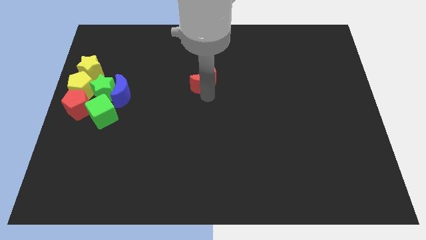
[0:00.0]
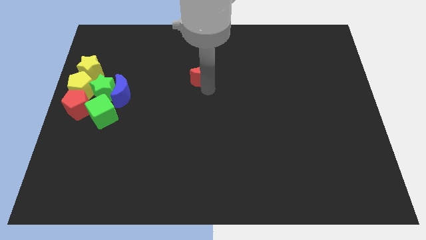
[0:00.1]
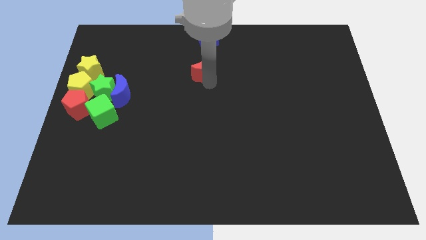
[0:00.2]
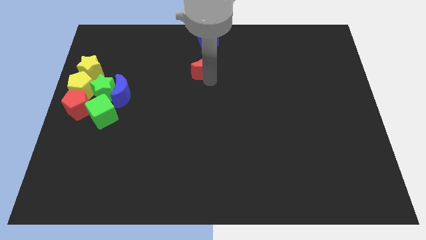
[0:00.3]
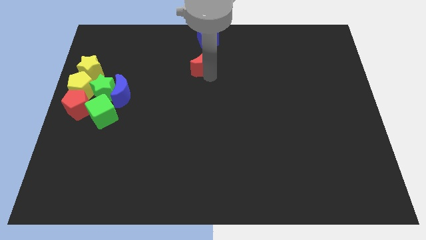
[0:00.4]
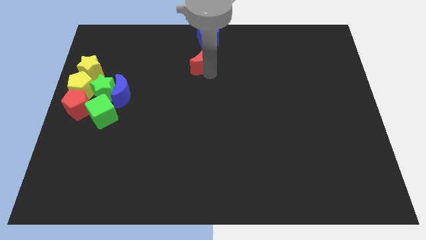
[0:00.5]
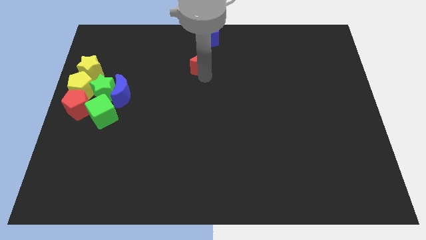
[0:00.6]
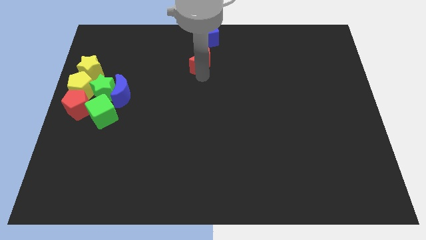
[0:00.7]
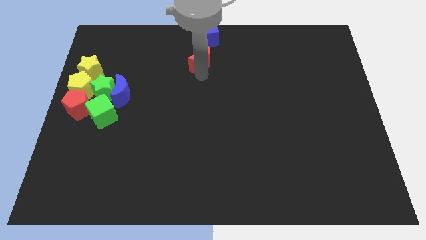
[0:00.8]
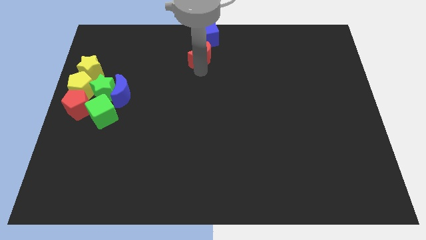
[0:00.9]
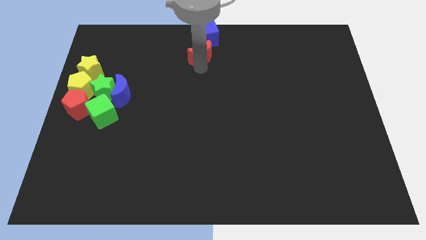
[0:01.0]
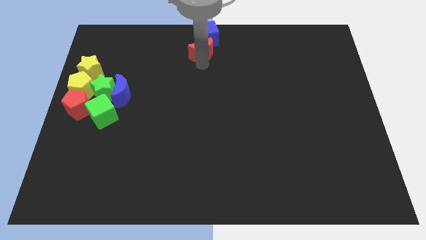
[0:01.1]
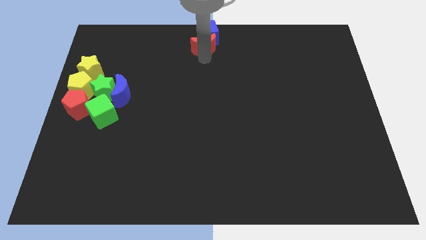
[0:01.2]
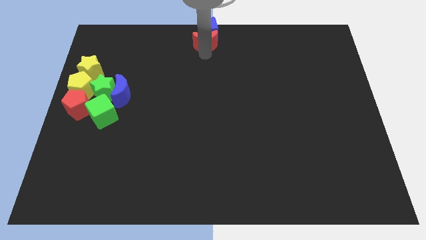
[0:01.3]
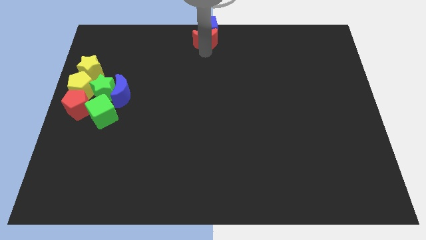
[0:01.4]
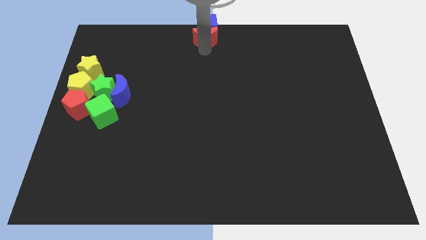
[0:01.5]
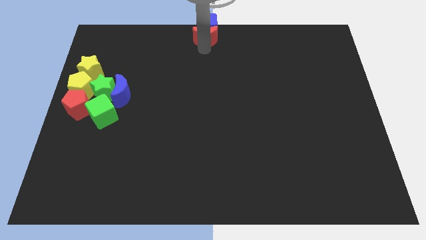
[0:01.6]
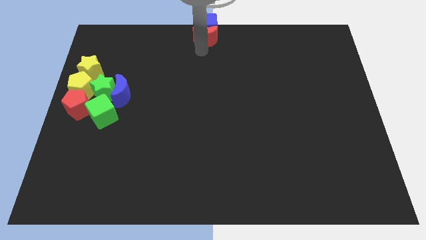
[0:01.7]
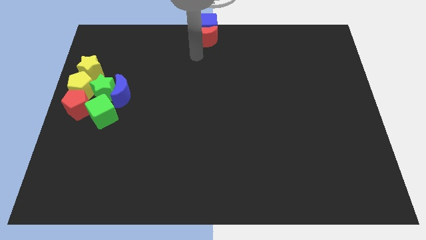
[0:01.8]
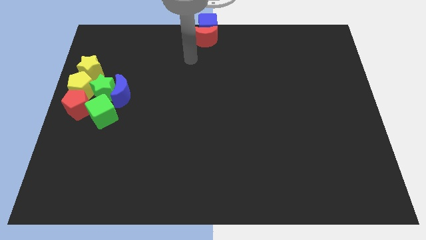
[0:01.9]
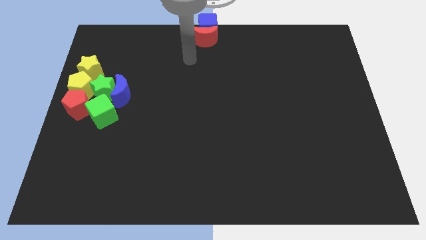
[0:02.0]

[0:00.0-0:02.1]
push the red moon into the blue cube

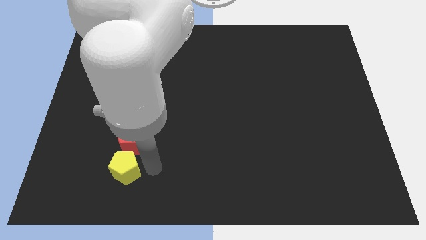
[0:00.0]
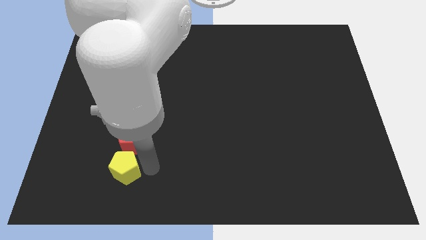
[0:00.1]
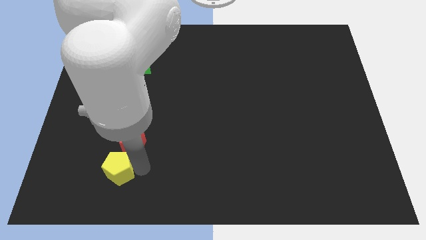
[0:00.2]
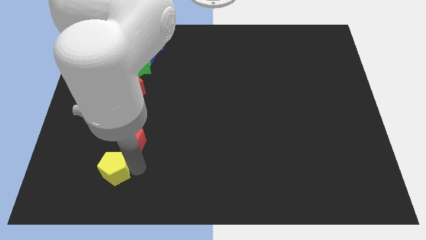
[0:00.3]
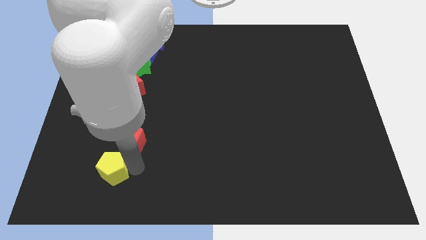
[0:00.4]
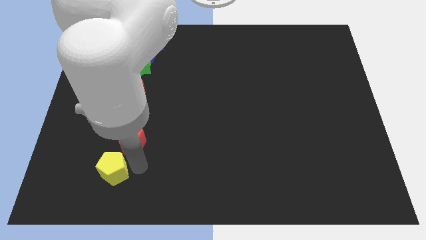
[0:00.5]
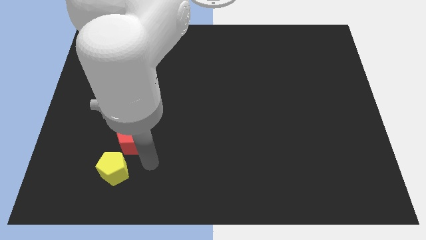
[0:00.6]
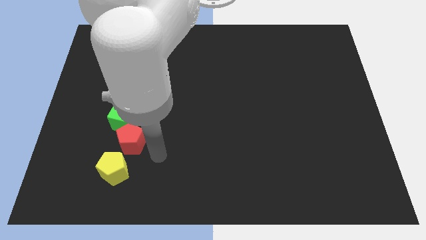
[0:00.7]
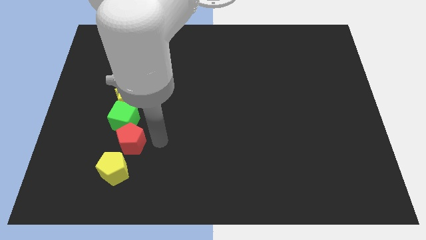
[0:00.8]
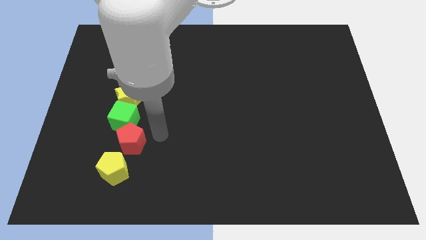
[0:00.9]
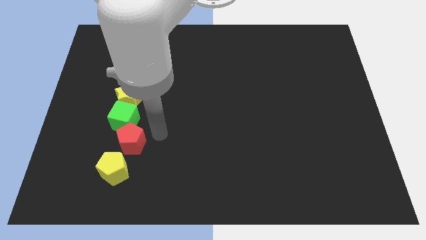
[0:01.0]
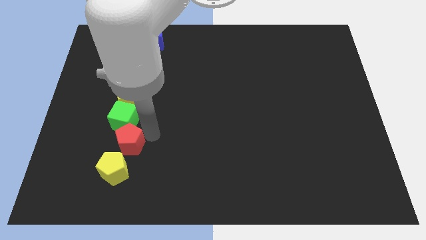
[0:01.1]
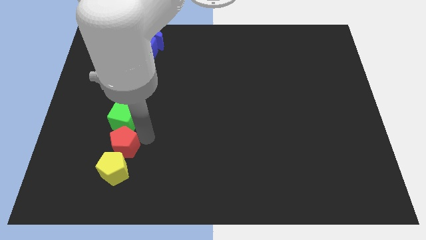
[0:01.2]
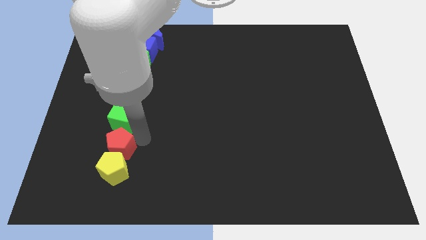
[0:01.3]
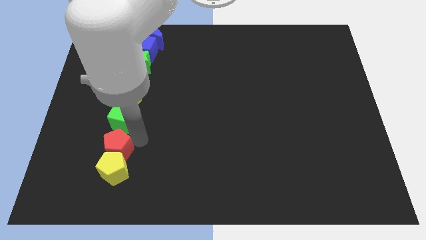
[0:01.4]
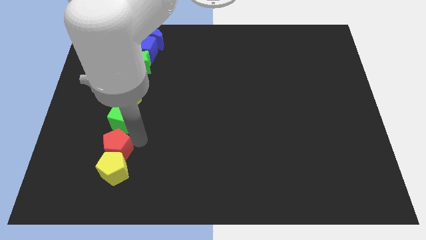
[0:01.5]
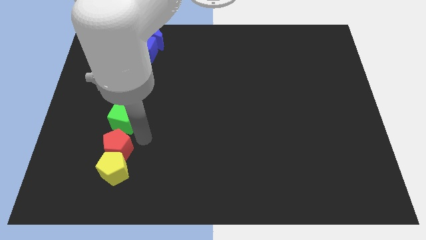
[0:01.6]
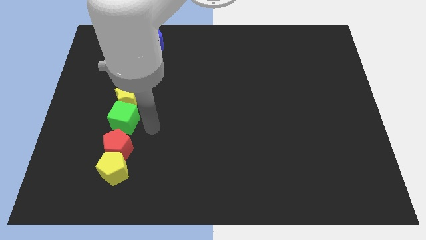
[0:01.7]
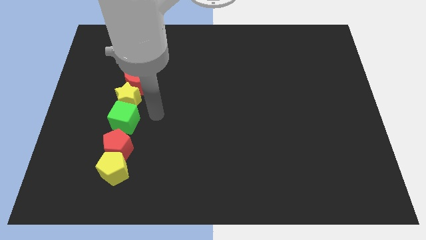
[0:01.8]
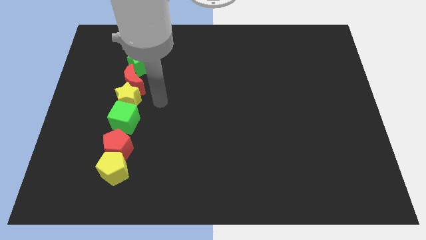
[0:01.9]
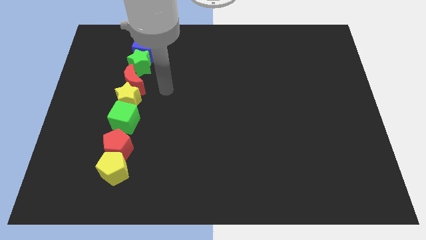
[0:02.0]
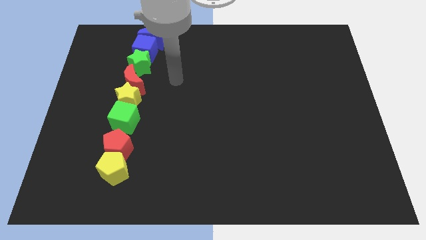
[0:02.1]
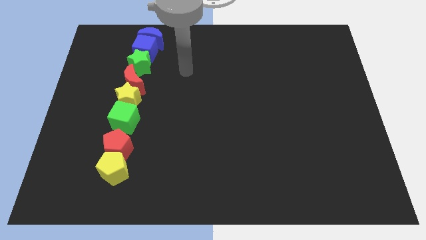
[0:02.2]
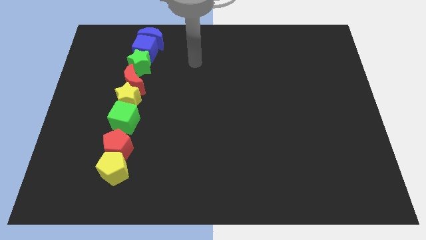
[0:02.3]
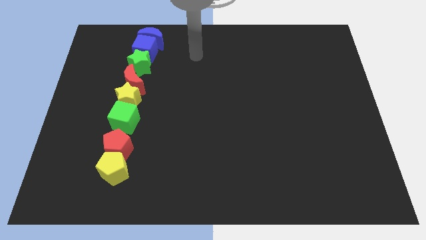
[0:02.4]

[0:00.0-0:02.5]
arrange all the blocks in a vertical line

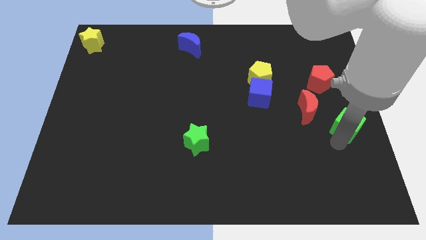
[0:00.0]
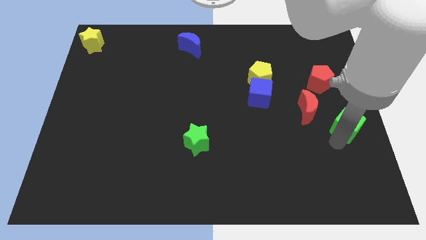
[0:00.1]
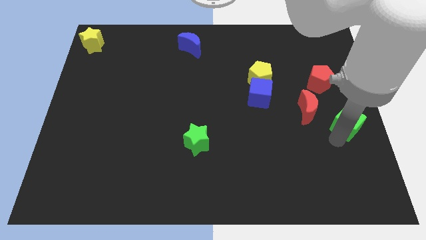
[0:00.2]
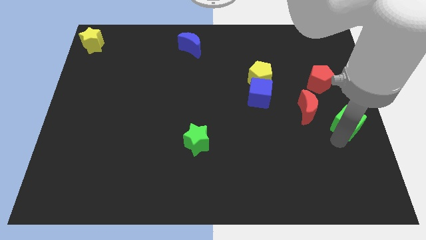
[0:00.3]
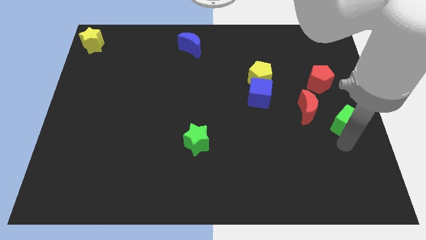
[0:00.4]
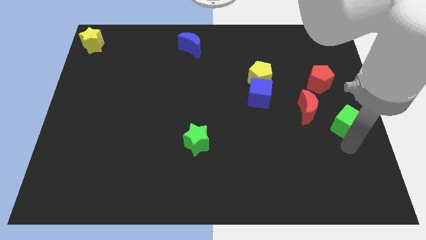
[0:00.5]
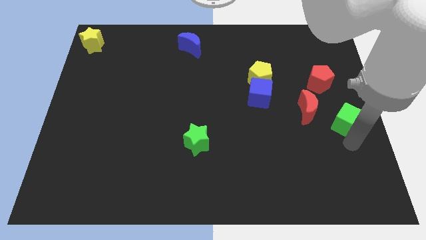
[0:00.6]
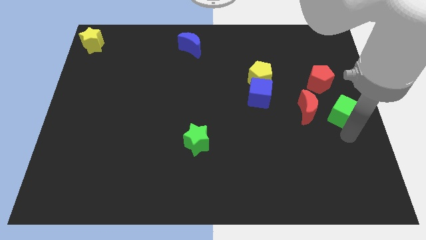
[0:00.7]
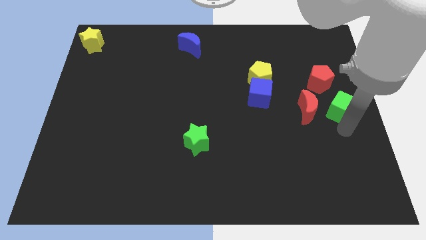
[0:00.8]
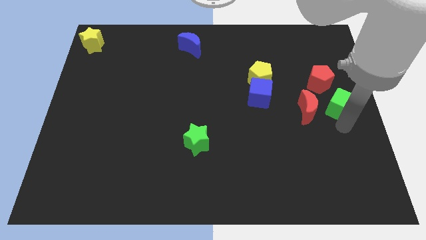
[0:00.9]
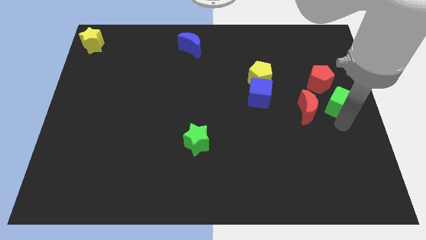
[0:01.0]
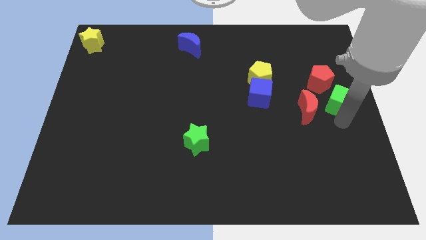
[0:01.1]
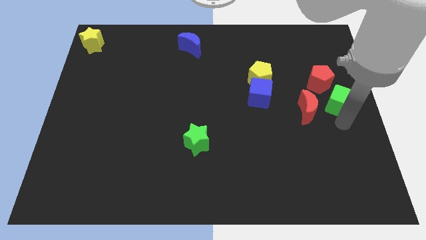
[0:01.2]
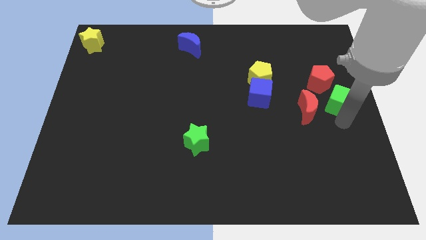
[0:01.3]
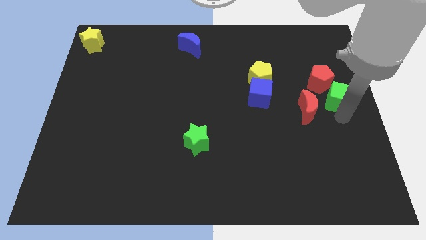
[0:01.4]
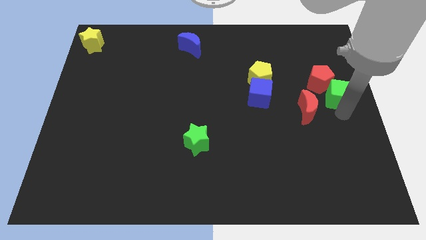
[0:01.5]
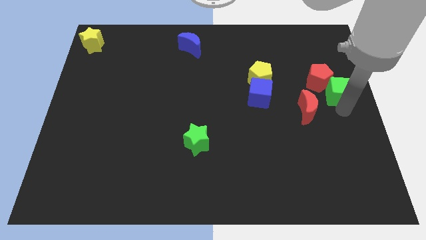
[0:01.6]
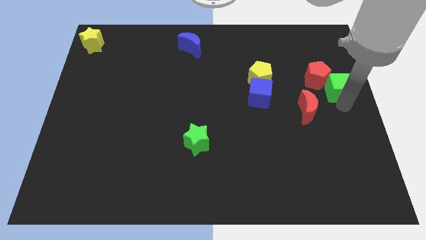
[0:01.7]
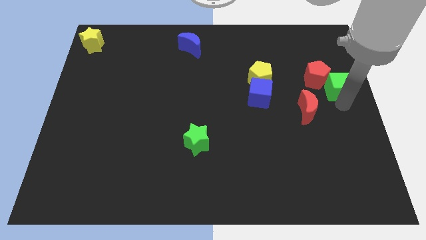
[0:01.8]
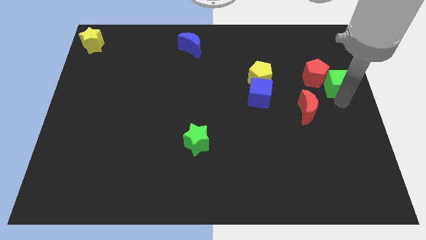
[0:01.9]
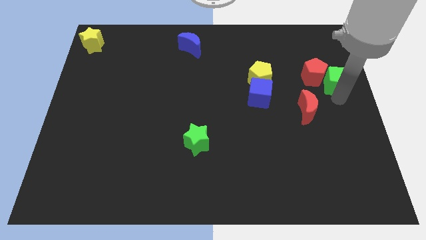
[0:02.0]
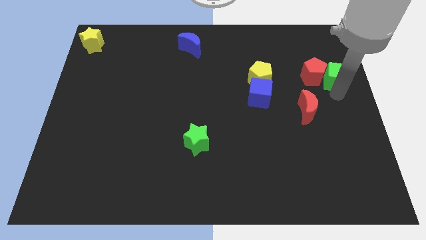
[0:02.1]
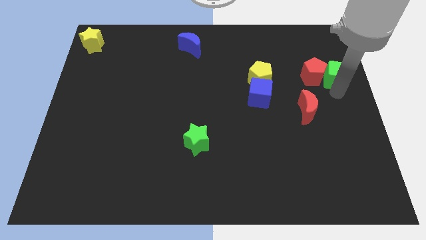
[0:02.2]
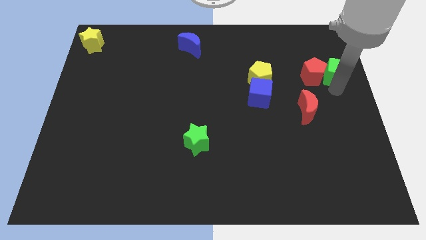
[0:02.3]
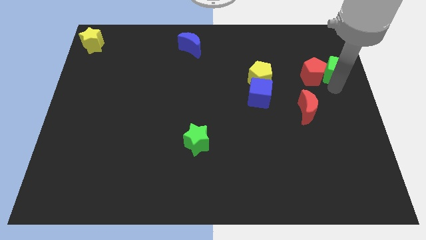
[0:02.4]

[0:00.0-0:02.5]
move the green cube to the right of the red pentagon

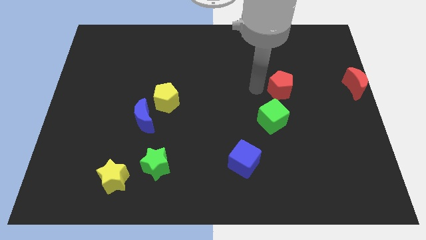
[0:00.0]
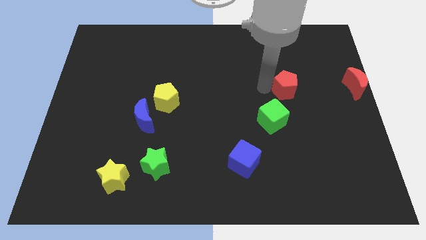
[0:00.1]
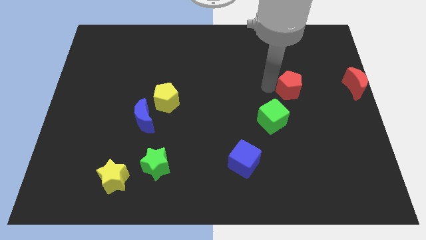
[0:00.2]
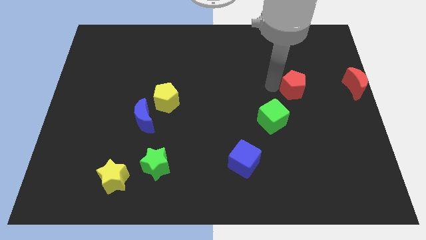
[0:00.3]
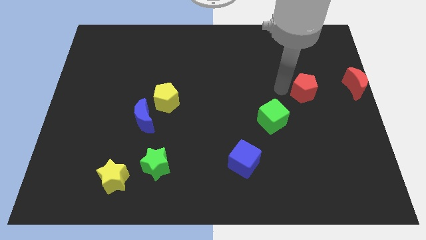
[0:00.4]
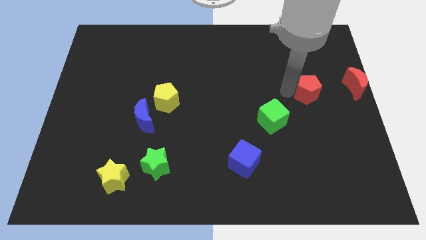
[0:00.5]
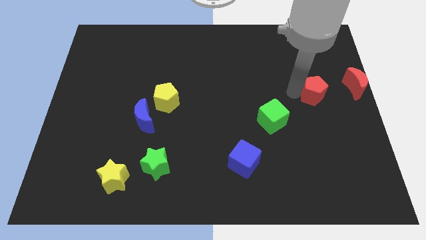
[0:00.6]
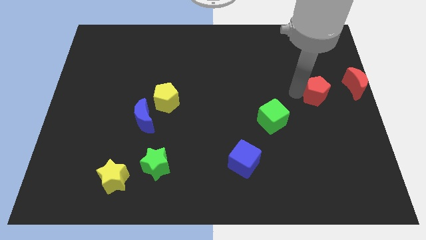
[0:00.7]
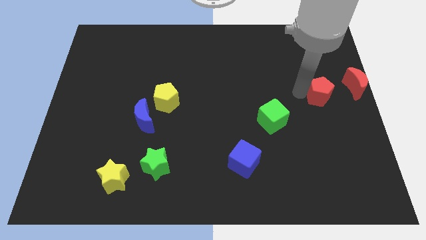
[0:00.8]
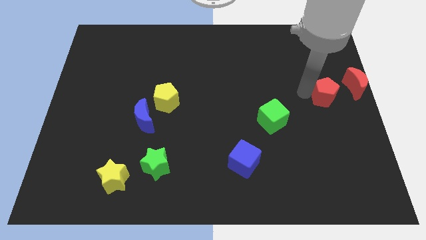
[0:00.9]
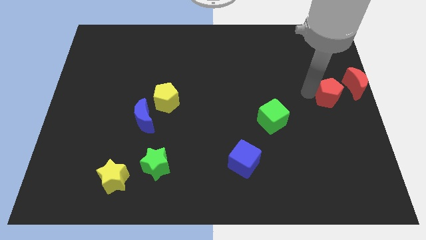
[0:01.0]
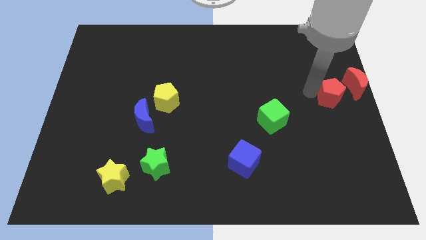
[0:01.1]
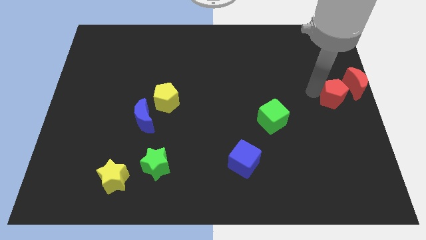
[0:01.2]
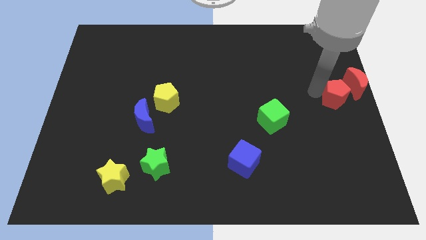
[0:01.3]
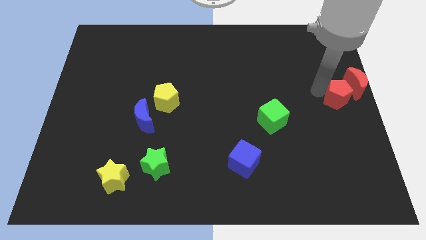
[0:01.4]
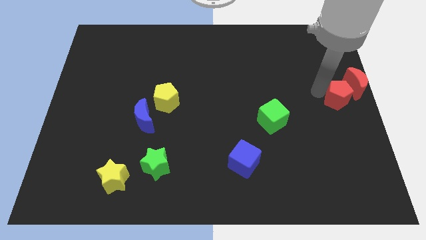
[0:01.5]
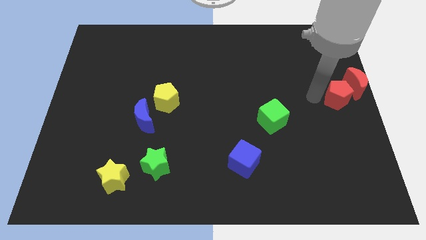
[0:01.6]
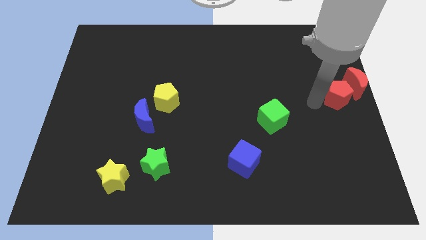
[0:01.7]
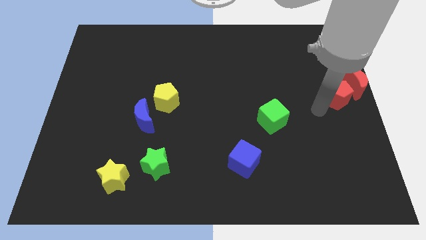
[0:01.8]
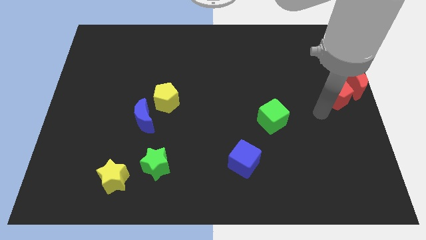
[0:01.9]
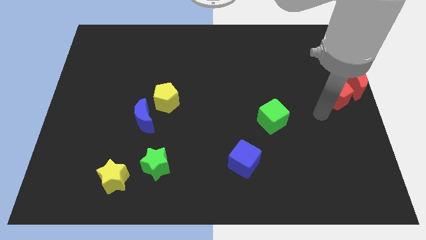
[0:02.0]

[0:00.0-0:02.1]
push red pentagon close to red moon
